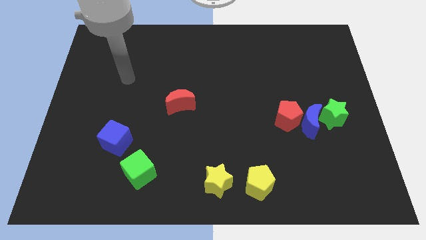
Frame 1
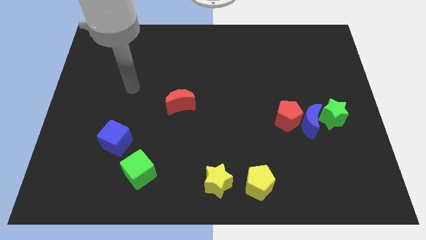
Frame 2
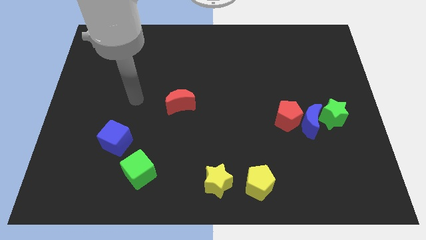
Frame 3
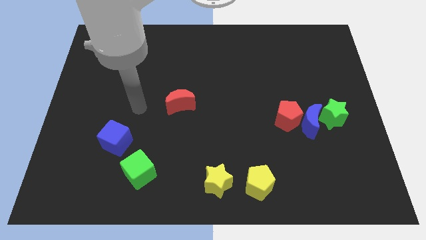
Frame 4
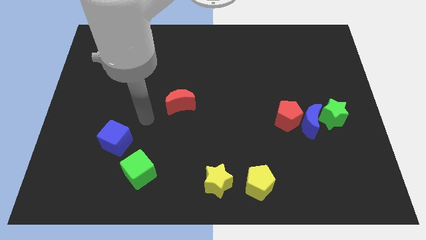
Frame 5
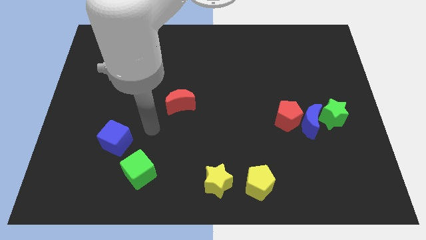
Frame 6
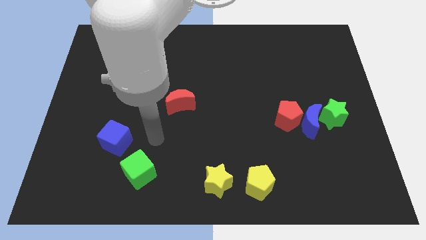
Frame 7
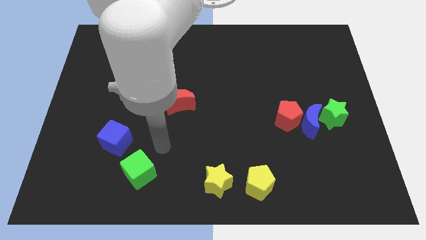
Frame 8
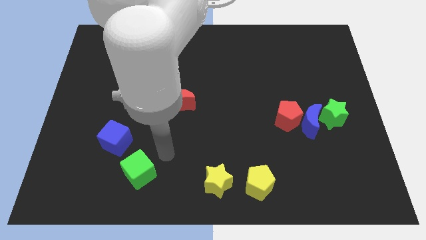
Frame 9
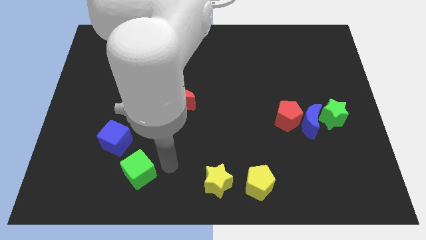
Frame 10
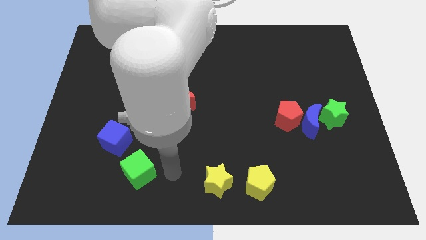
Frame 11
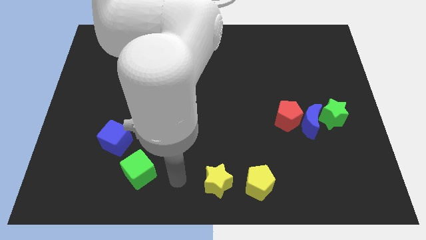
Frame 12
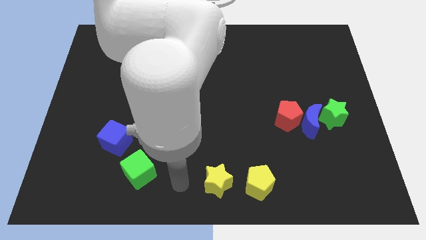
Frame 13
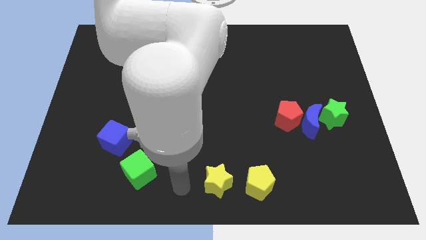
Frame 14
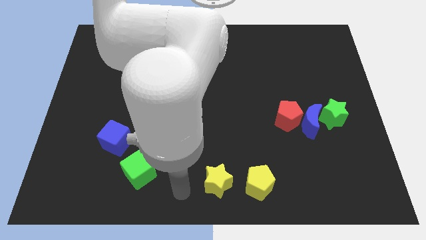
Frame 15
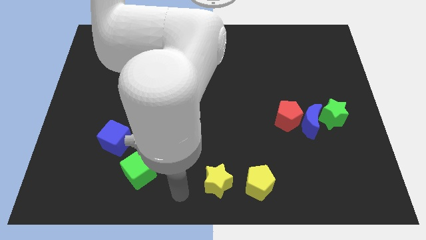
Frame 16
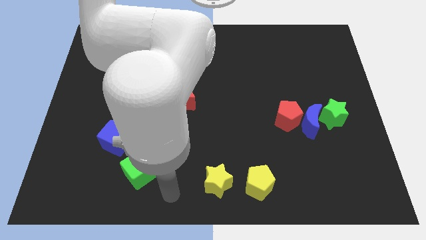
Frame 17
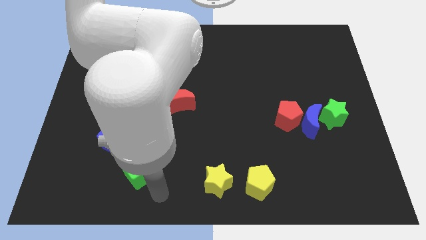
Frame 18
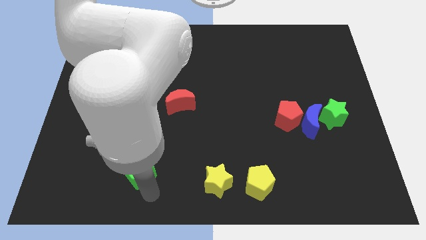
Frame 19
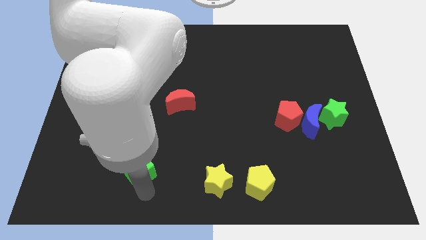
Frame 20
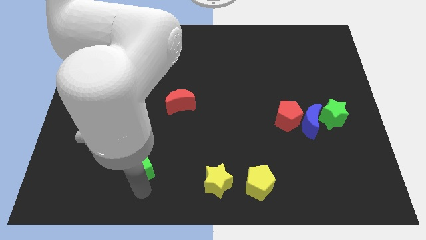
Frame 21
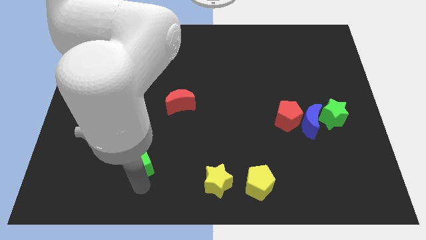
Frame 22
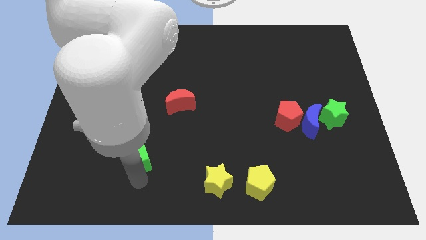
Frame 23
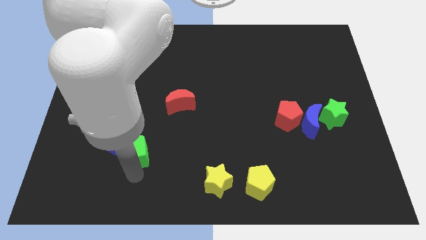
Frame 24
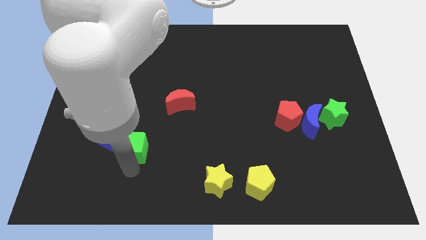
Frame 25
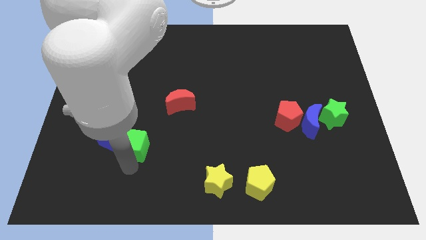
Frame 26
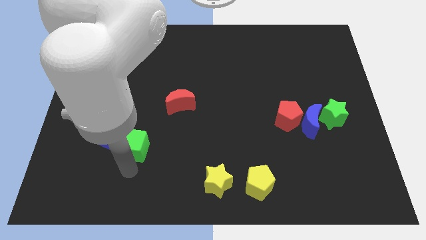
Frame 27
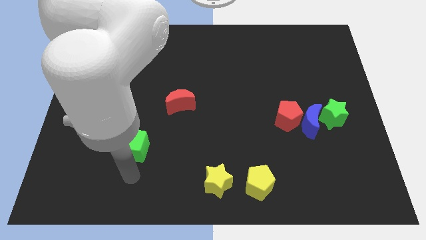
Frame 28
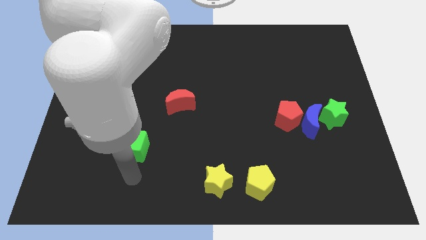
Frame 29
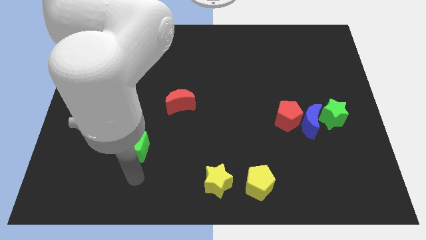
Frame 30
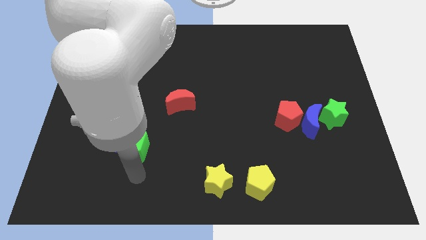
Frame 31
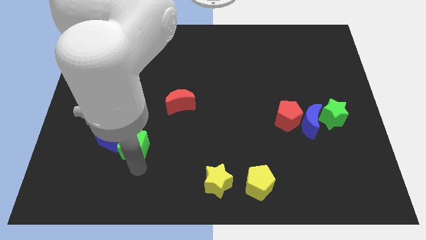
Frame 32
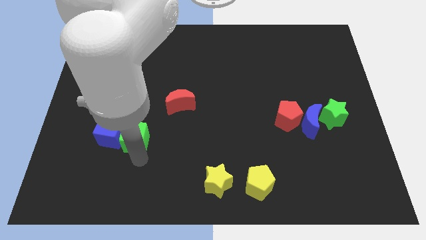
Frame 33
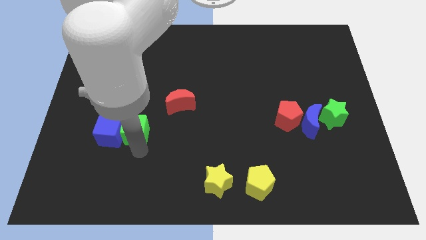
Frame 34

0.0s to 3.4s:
put the green cube to the right of the blue cube

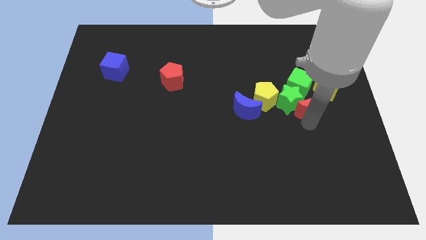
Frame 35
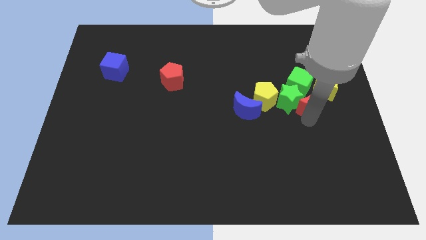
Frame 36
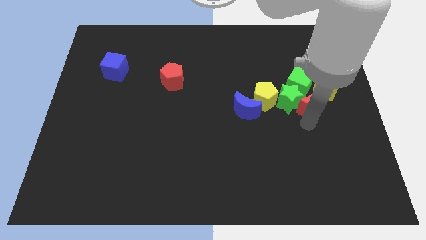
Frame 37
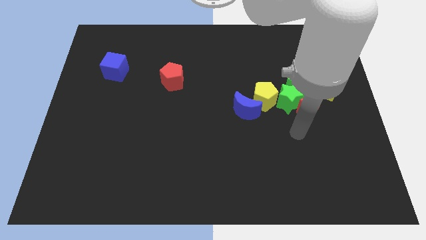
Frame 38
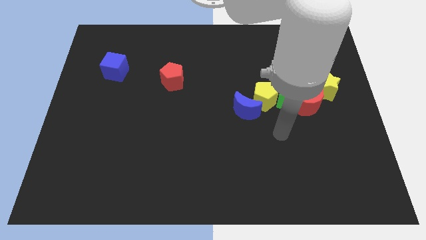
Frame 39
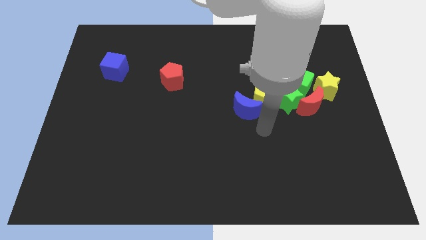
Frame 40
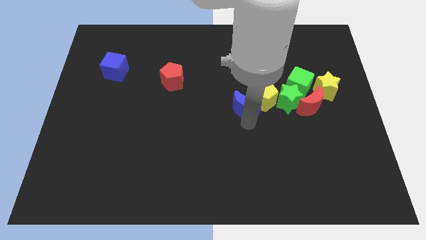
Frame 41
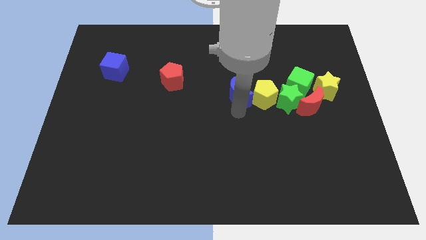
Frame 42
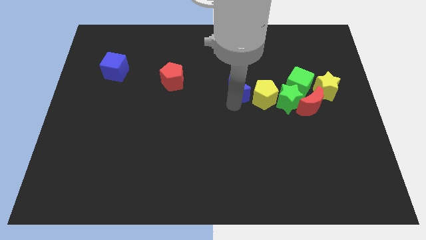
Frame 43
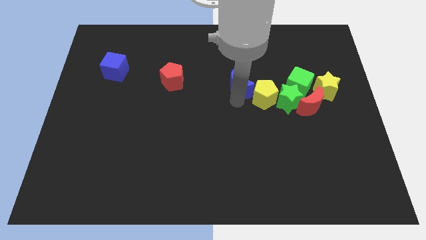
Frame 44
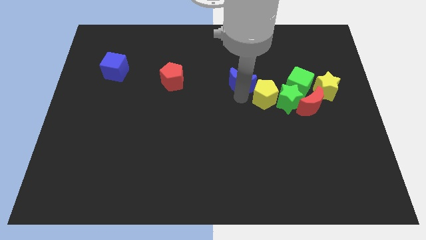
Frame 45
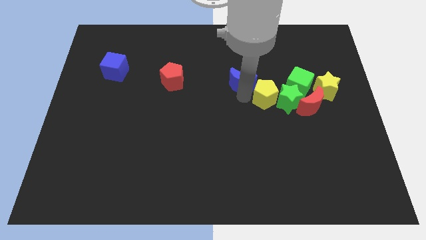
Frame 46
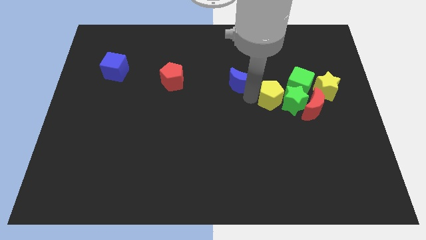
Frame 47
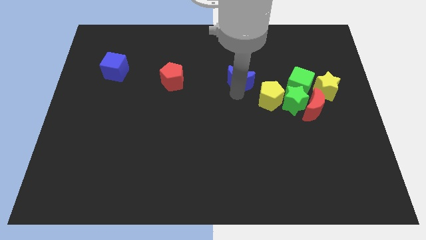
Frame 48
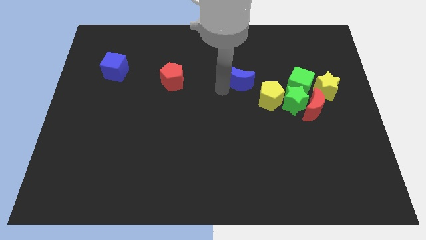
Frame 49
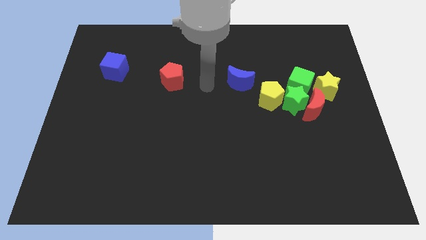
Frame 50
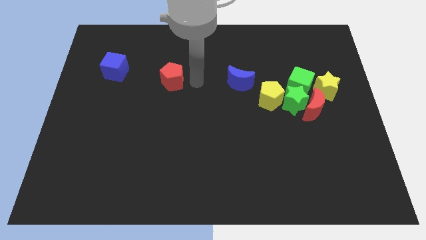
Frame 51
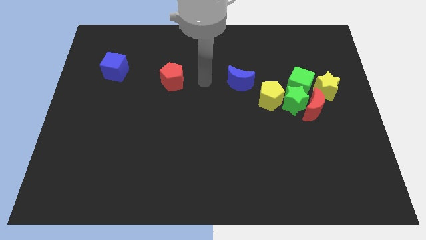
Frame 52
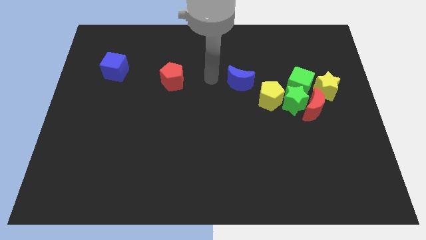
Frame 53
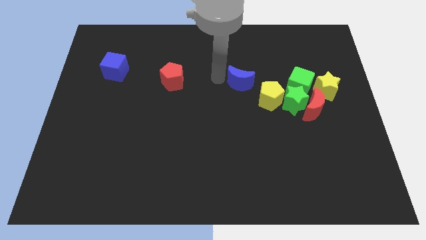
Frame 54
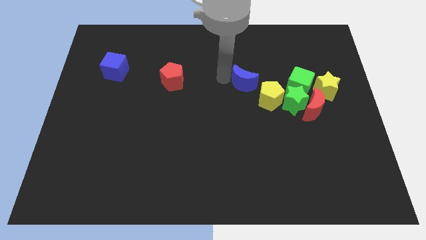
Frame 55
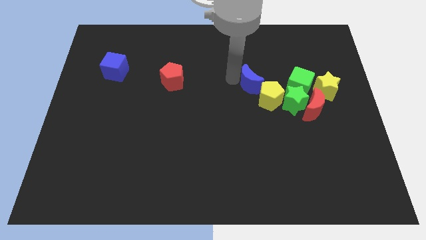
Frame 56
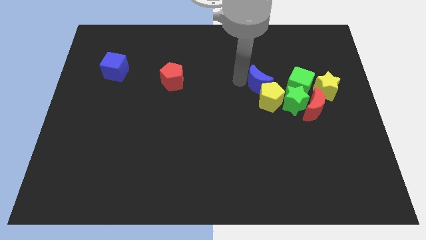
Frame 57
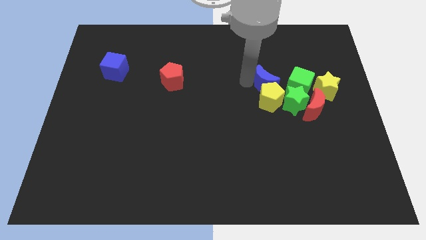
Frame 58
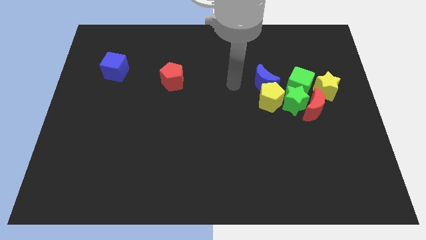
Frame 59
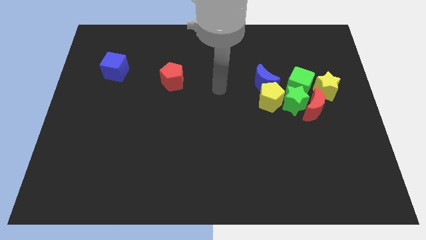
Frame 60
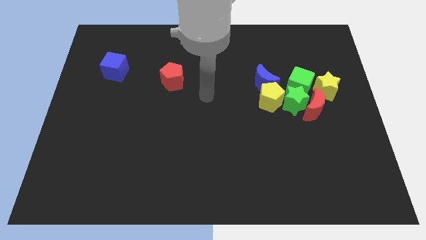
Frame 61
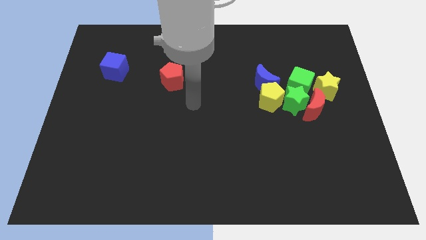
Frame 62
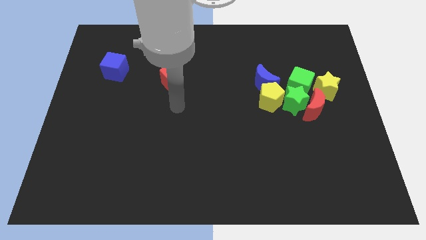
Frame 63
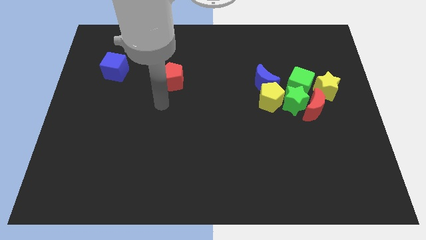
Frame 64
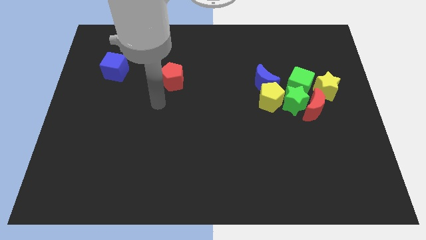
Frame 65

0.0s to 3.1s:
put the blue moon at the top of the yellow pentagon

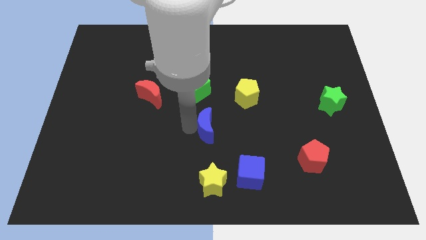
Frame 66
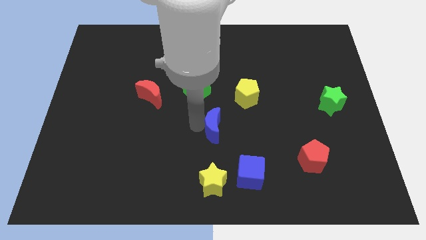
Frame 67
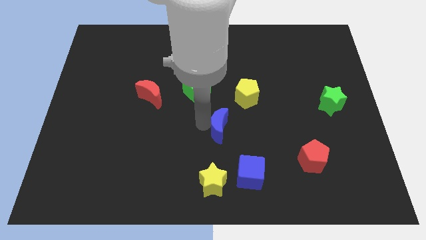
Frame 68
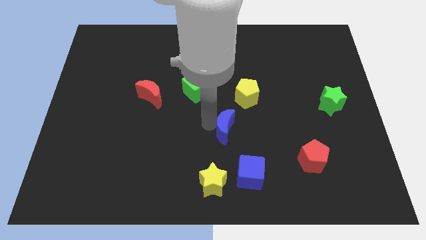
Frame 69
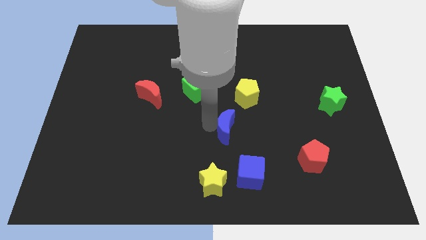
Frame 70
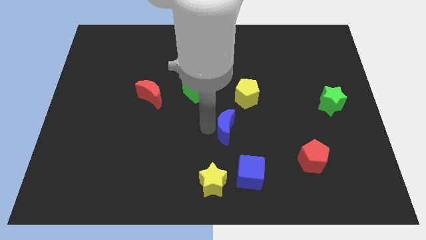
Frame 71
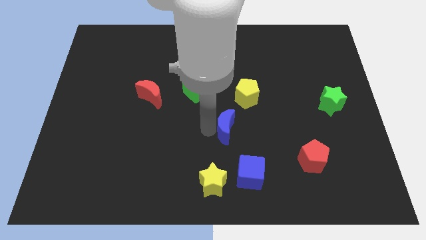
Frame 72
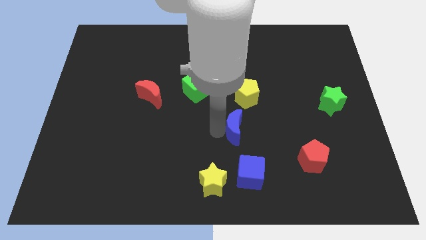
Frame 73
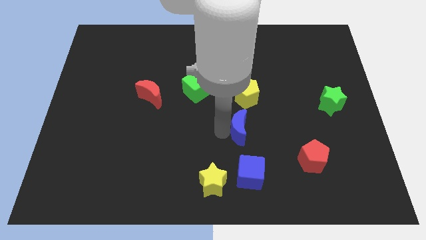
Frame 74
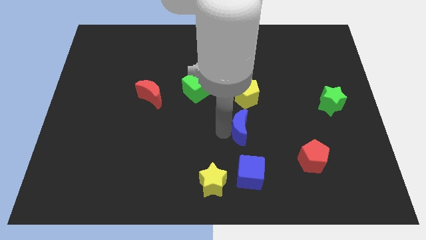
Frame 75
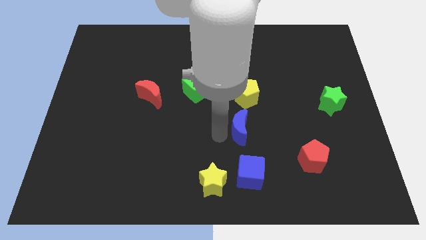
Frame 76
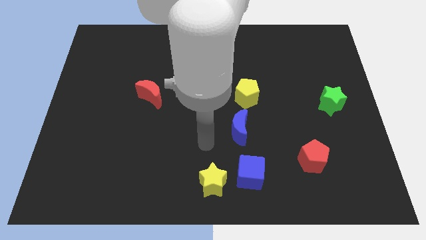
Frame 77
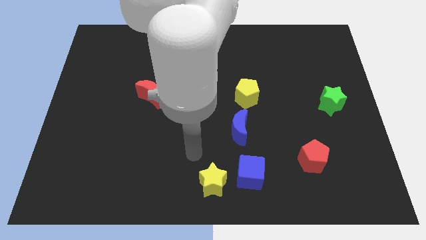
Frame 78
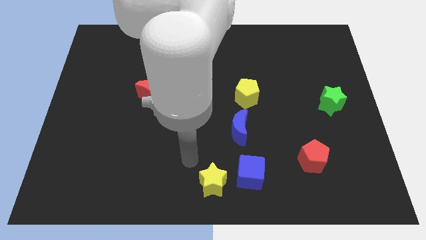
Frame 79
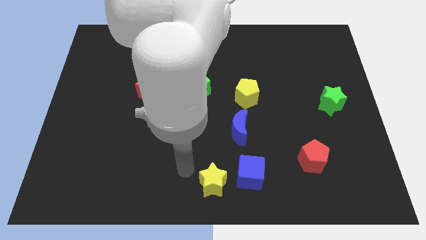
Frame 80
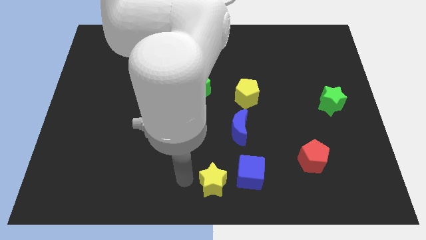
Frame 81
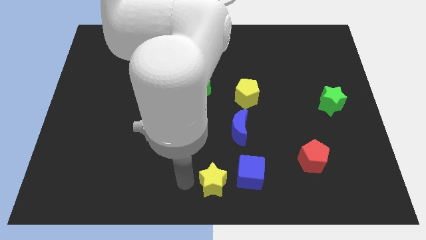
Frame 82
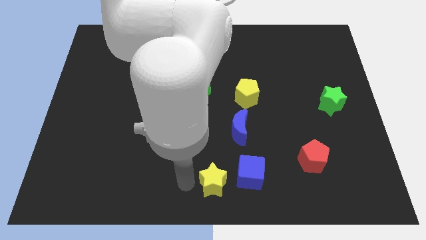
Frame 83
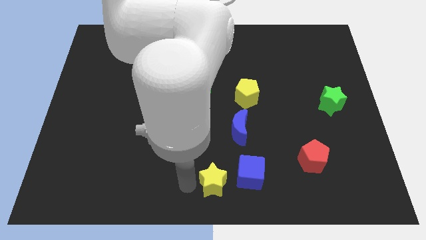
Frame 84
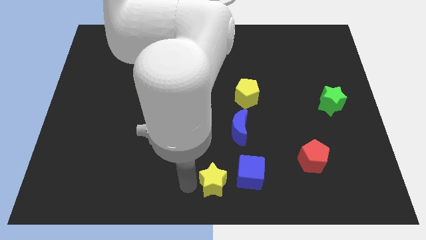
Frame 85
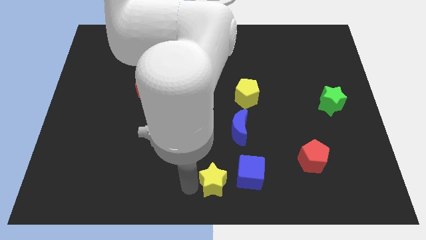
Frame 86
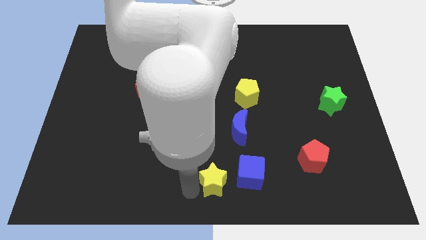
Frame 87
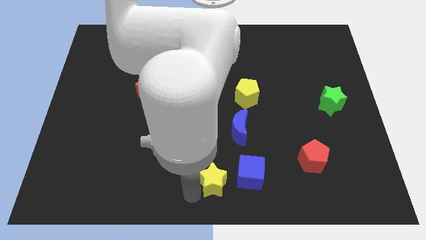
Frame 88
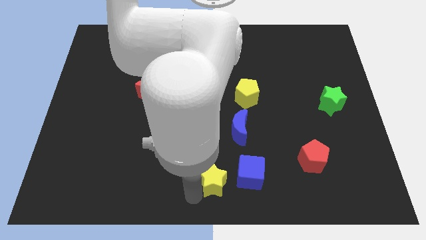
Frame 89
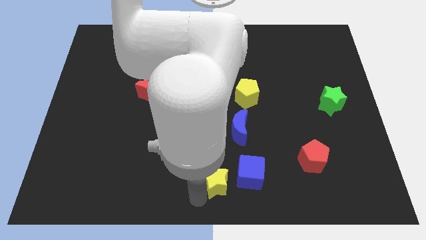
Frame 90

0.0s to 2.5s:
push blue moon below yellow pentagon
